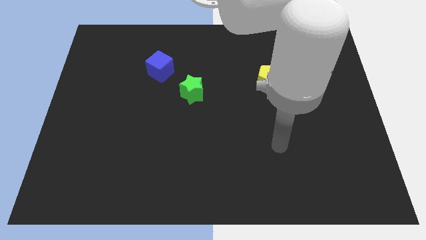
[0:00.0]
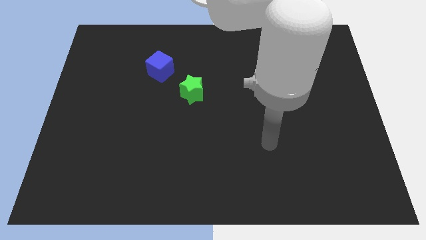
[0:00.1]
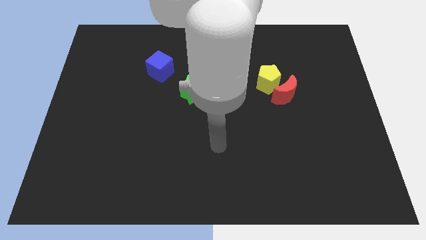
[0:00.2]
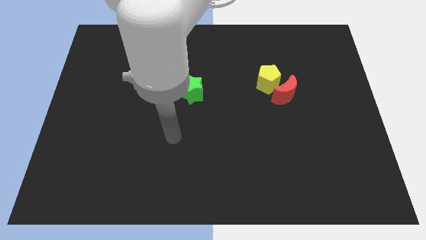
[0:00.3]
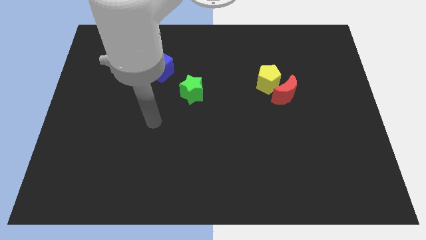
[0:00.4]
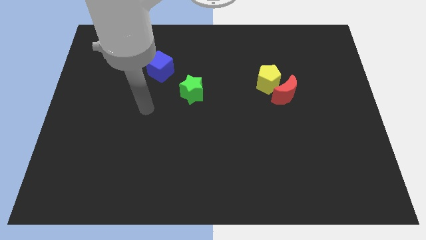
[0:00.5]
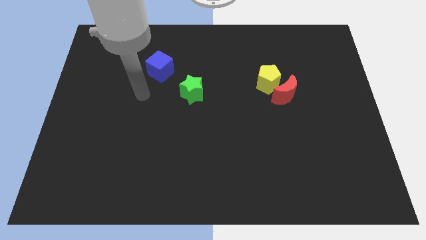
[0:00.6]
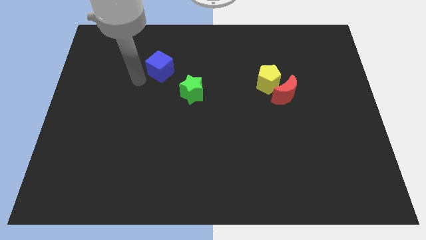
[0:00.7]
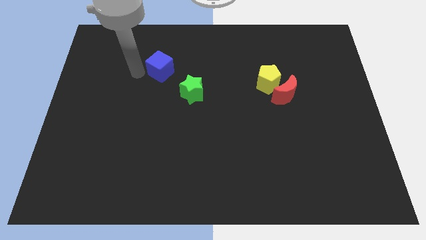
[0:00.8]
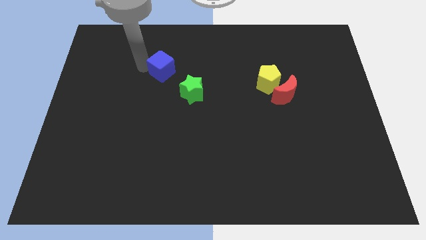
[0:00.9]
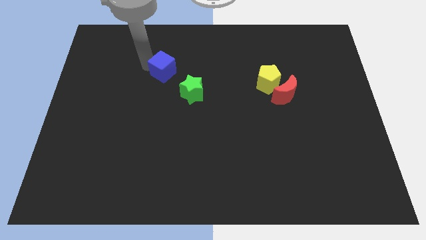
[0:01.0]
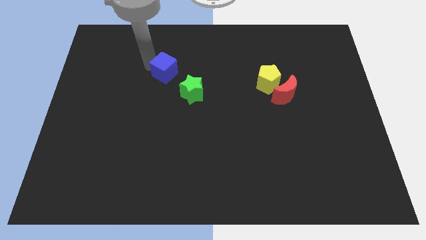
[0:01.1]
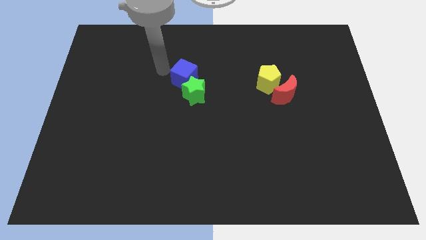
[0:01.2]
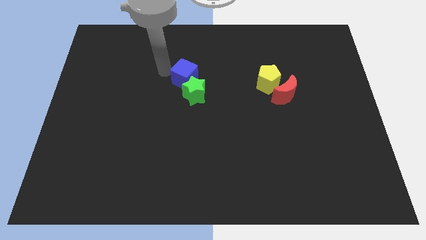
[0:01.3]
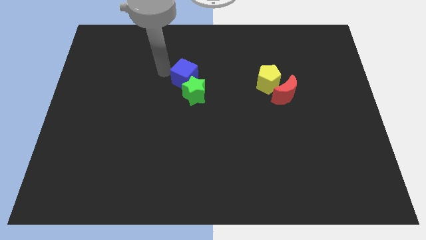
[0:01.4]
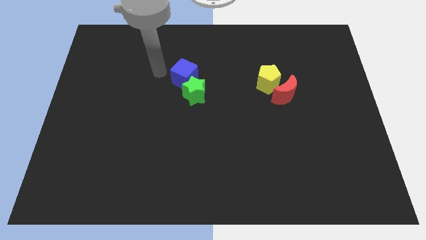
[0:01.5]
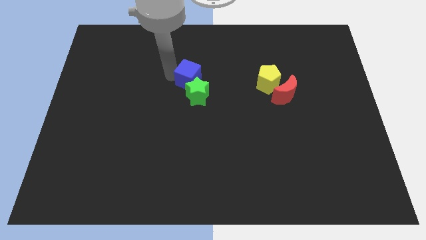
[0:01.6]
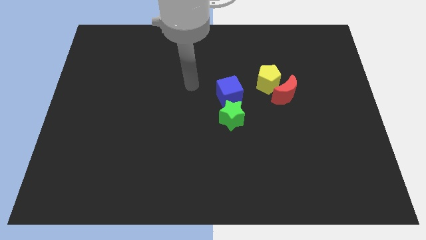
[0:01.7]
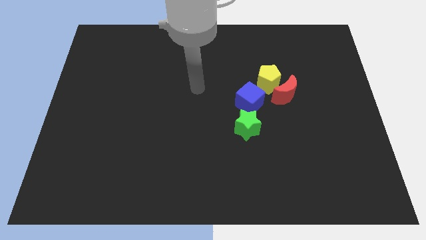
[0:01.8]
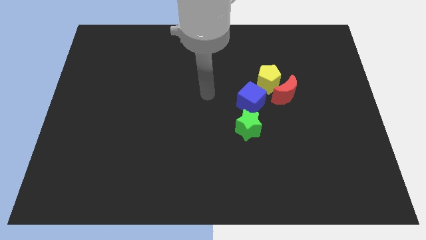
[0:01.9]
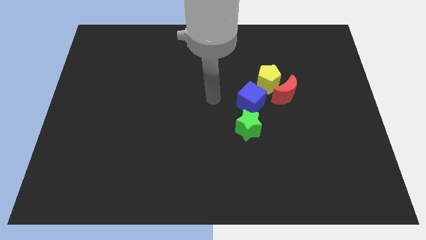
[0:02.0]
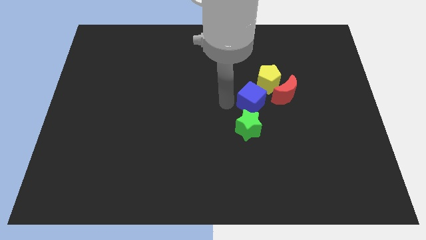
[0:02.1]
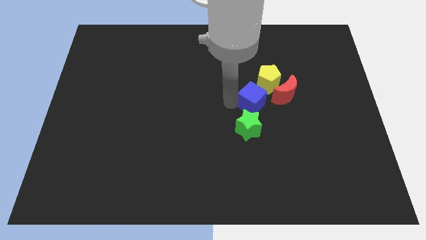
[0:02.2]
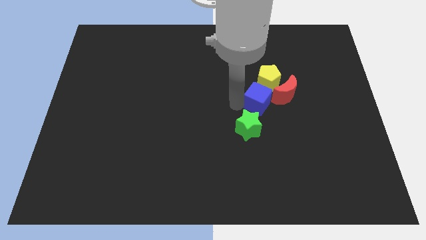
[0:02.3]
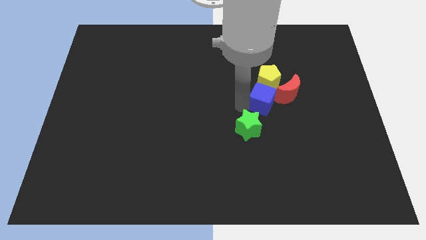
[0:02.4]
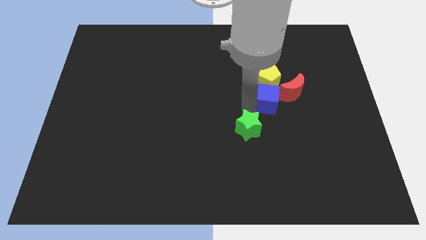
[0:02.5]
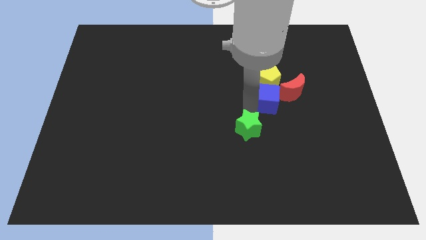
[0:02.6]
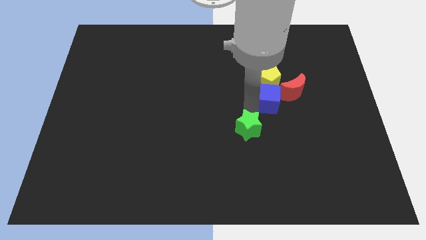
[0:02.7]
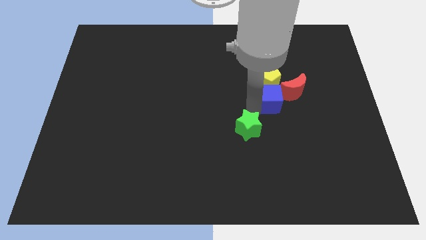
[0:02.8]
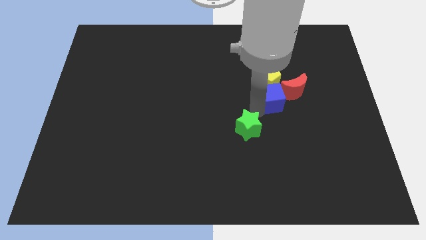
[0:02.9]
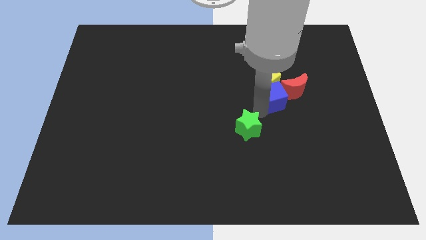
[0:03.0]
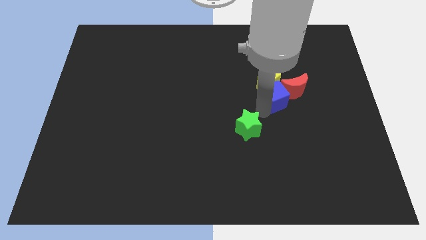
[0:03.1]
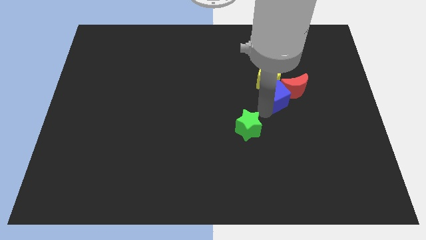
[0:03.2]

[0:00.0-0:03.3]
move the blue cube towards the red block

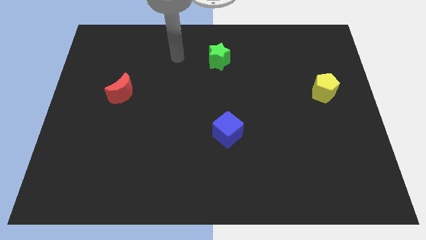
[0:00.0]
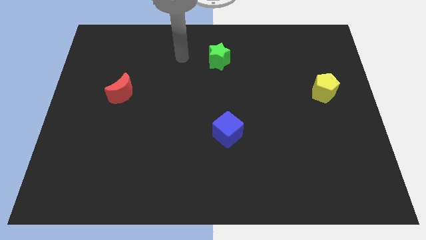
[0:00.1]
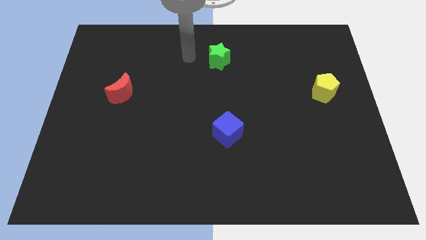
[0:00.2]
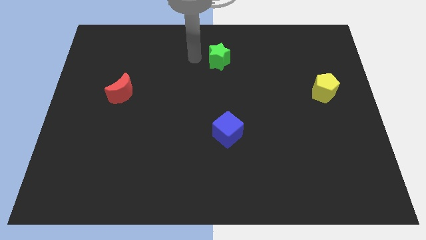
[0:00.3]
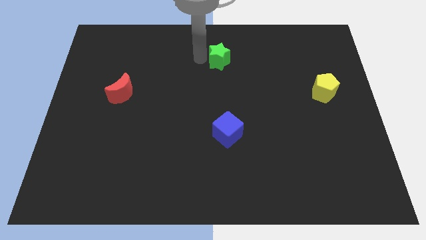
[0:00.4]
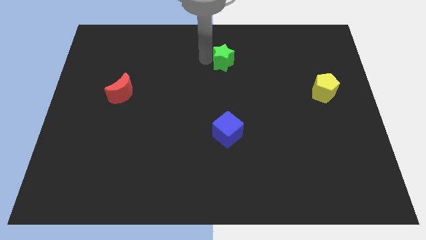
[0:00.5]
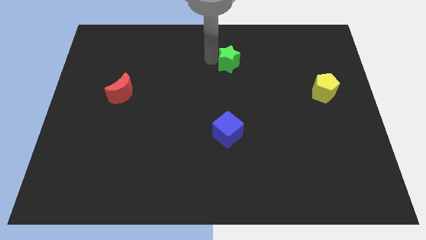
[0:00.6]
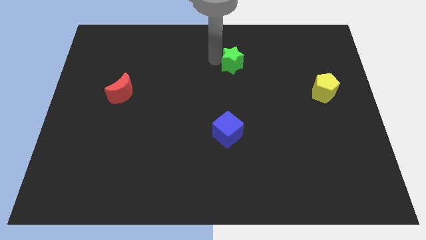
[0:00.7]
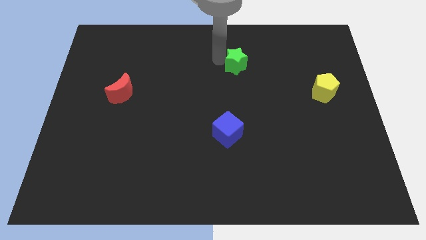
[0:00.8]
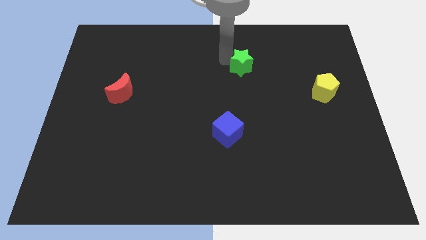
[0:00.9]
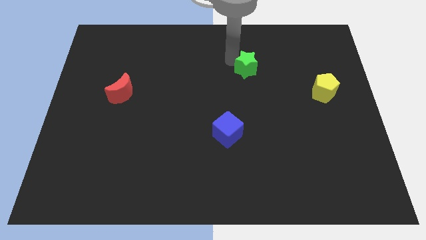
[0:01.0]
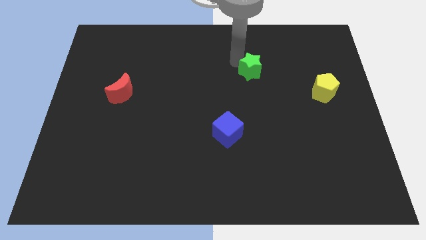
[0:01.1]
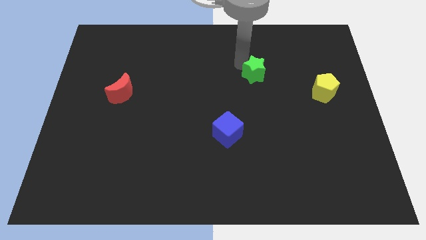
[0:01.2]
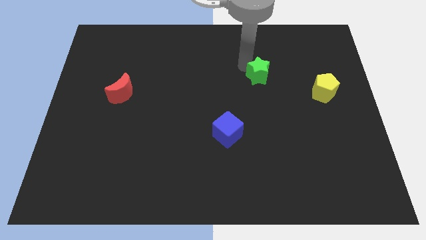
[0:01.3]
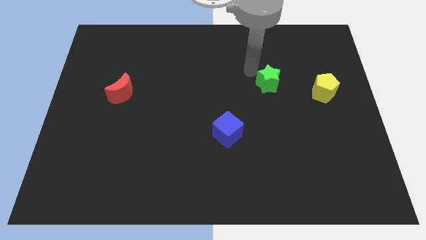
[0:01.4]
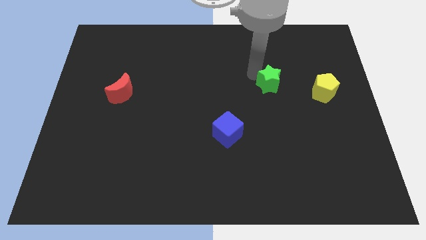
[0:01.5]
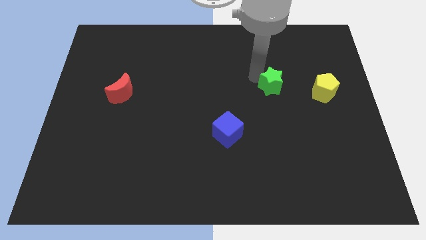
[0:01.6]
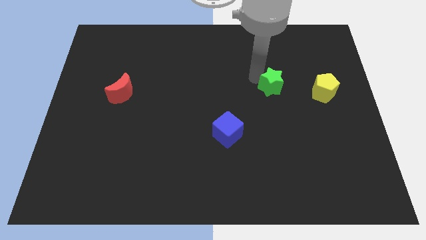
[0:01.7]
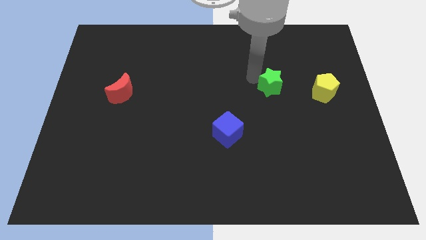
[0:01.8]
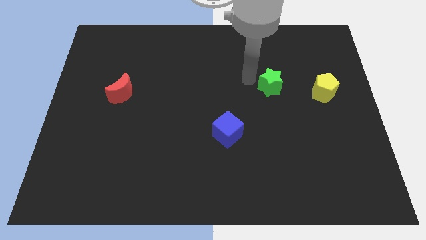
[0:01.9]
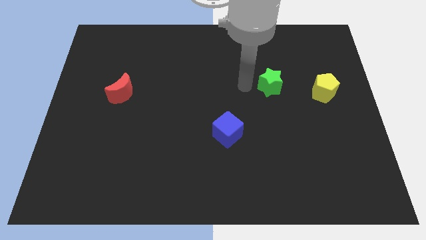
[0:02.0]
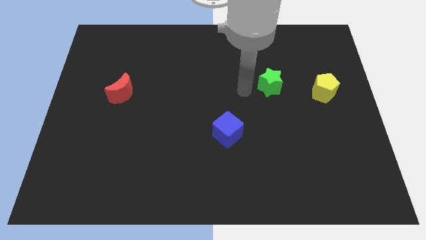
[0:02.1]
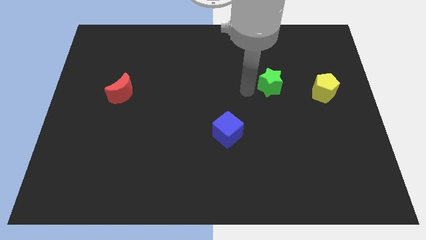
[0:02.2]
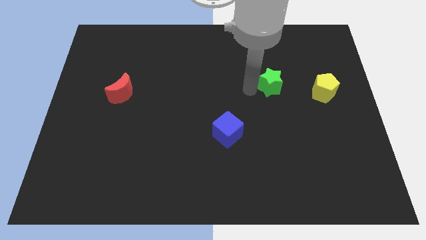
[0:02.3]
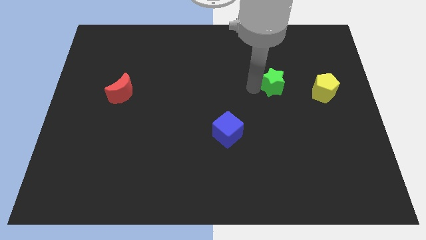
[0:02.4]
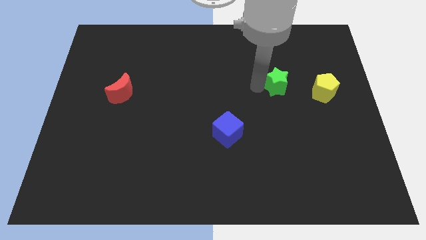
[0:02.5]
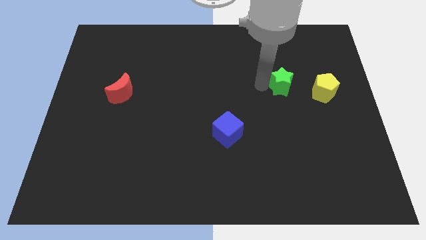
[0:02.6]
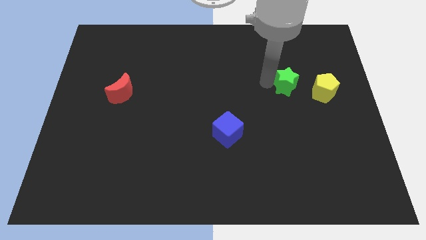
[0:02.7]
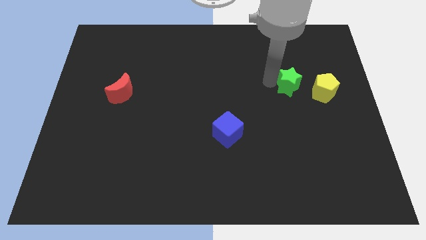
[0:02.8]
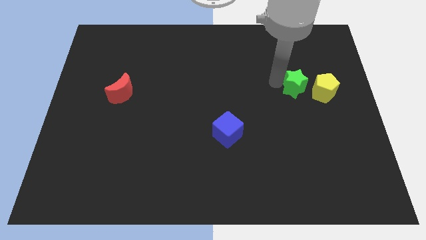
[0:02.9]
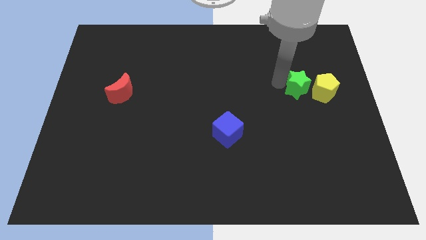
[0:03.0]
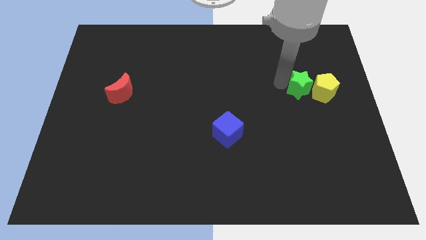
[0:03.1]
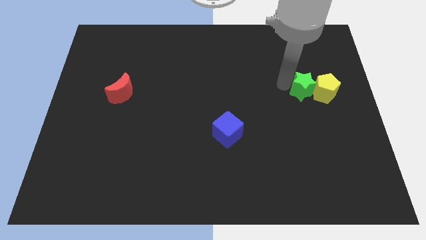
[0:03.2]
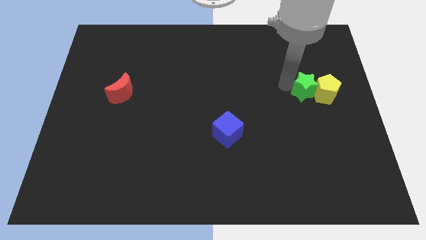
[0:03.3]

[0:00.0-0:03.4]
move the green star to the yellow block

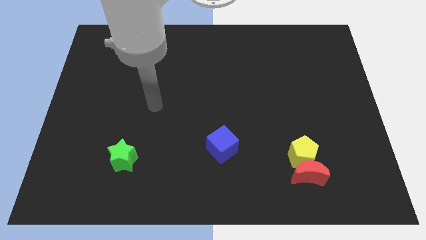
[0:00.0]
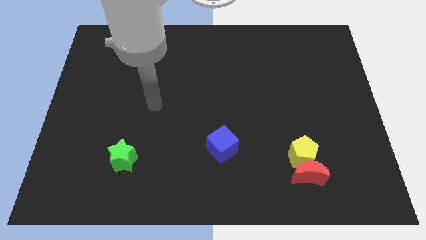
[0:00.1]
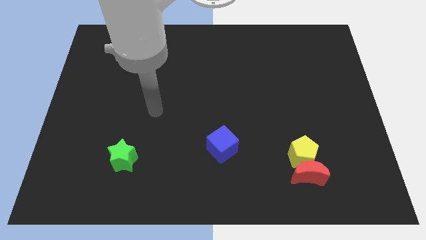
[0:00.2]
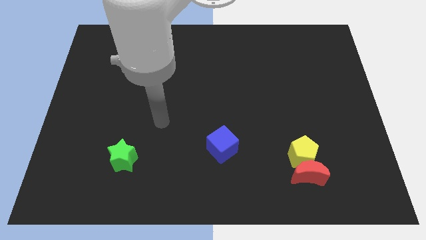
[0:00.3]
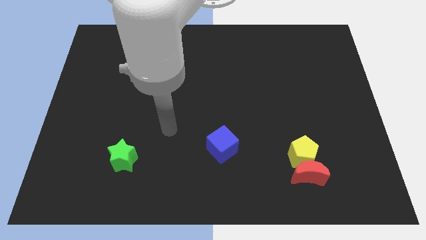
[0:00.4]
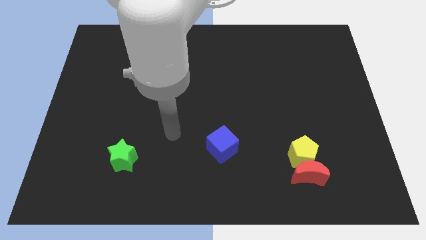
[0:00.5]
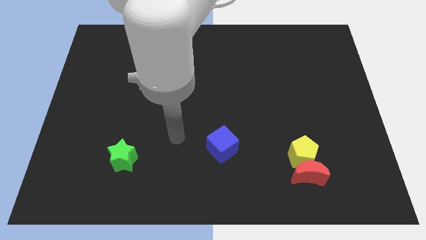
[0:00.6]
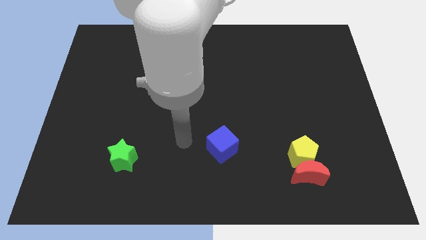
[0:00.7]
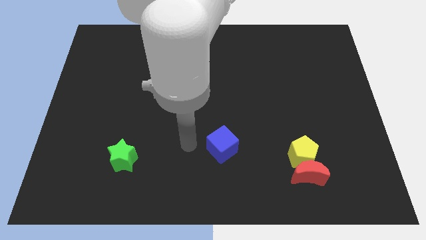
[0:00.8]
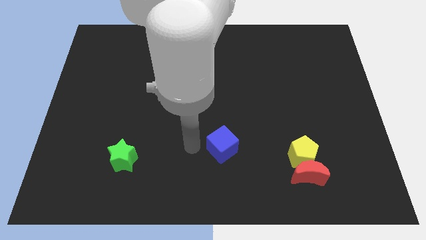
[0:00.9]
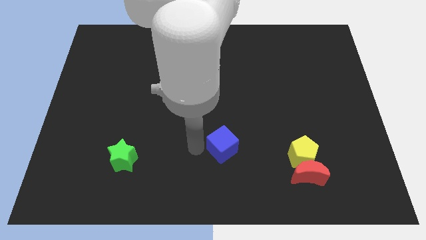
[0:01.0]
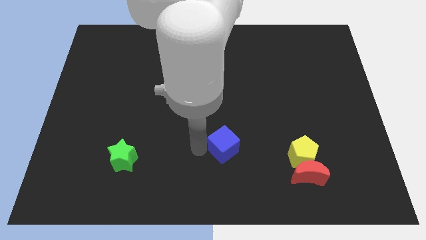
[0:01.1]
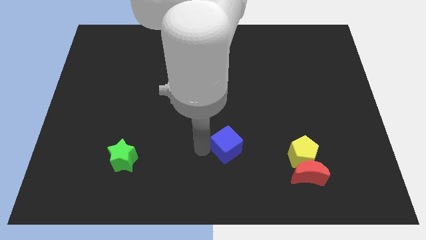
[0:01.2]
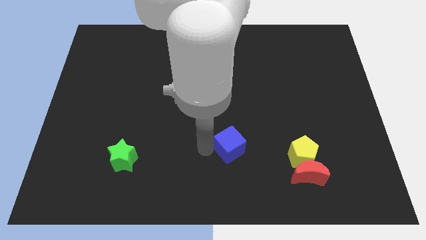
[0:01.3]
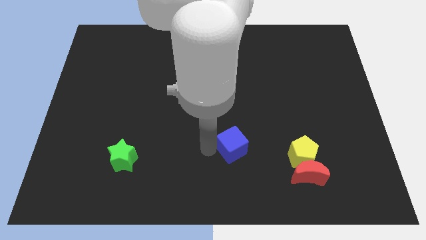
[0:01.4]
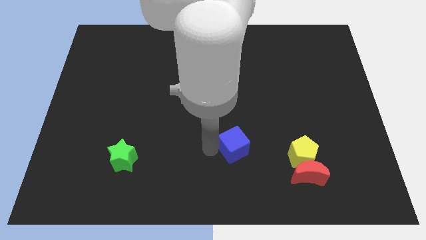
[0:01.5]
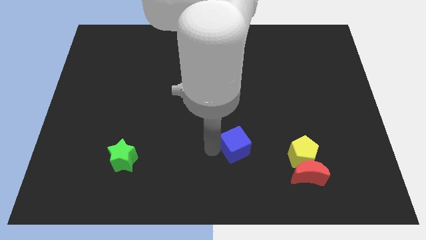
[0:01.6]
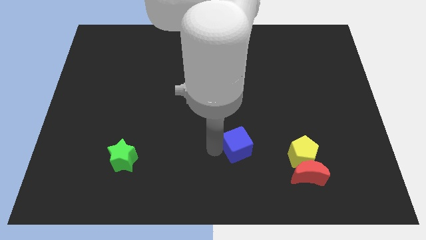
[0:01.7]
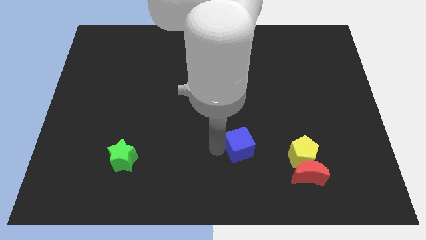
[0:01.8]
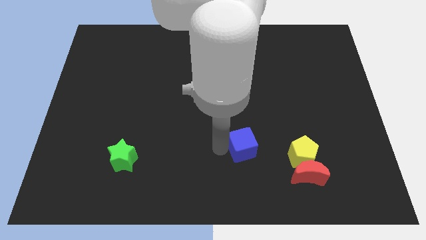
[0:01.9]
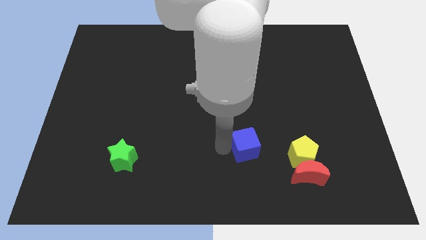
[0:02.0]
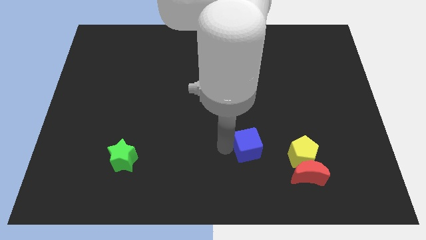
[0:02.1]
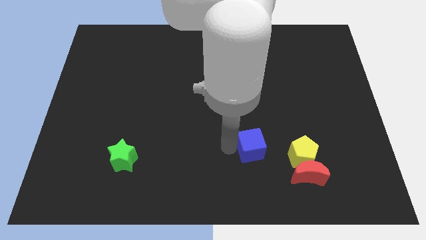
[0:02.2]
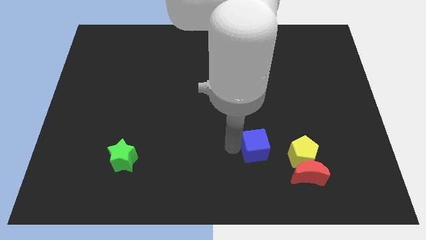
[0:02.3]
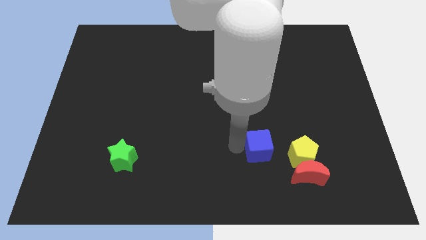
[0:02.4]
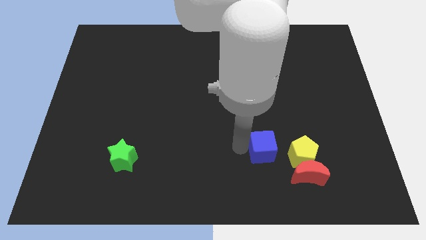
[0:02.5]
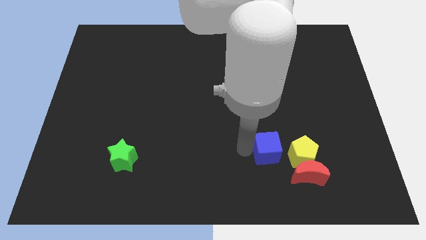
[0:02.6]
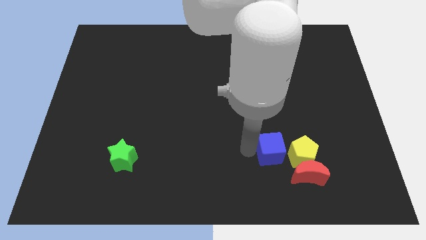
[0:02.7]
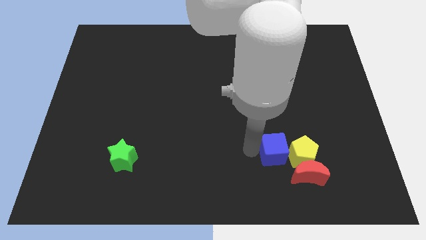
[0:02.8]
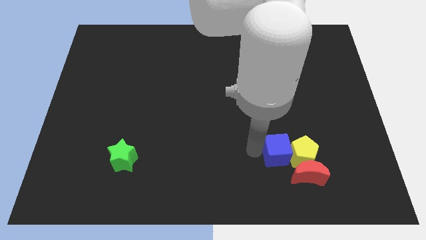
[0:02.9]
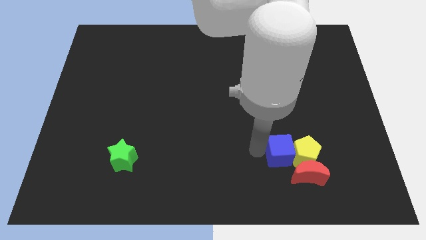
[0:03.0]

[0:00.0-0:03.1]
push the blue cube to the yellow block
